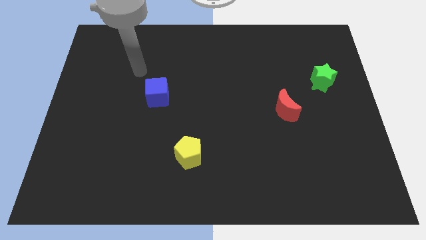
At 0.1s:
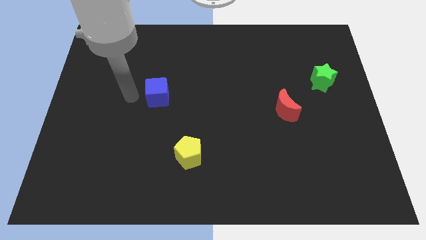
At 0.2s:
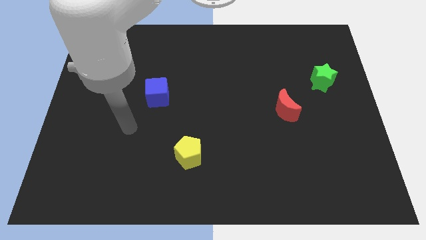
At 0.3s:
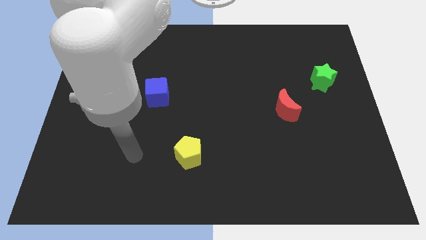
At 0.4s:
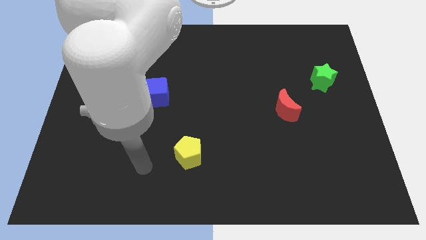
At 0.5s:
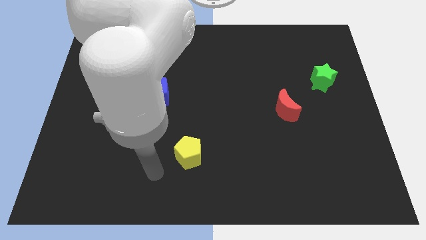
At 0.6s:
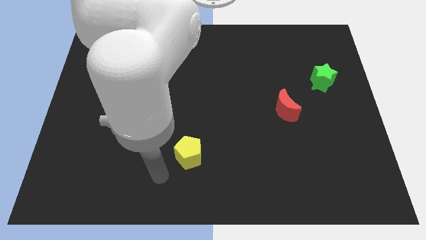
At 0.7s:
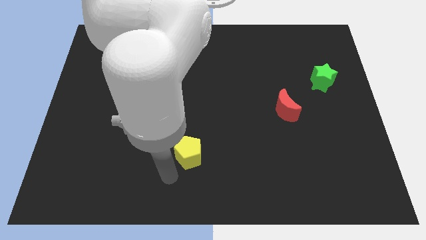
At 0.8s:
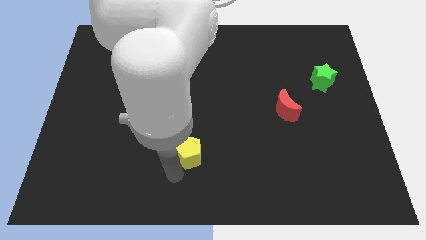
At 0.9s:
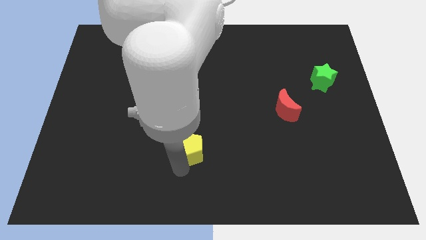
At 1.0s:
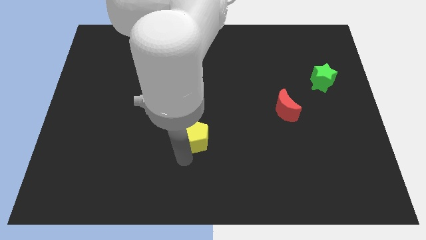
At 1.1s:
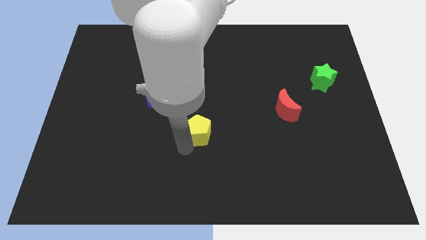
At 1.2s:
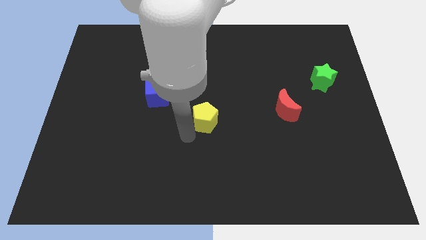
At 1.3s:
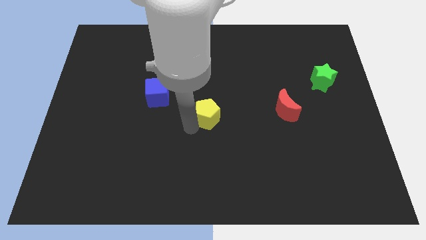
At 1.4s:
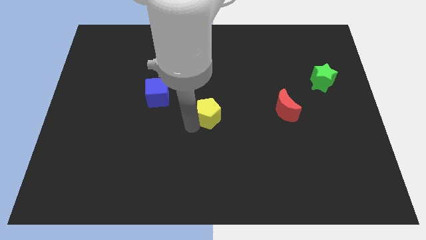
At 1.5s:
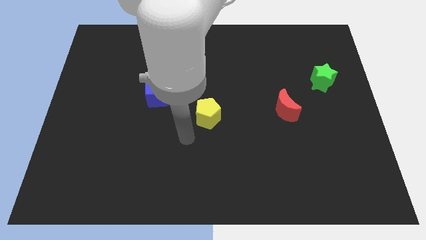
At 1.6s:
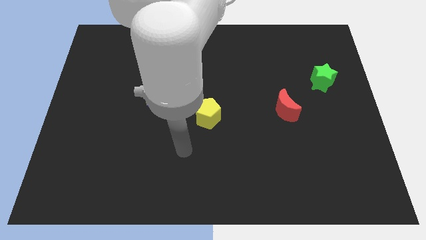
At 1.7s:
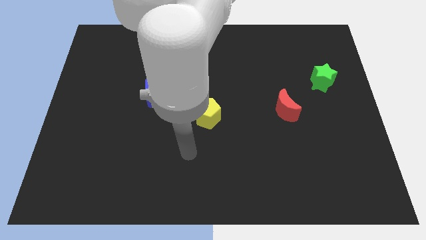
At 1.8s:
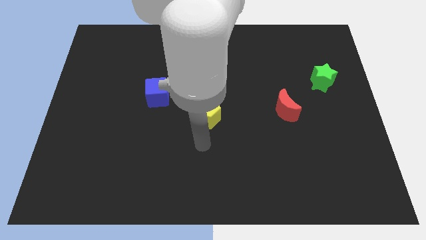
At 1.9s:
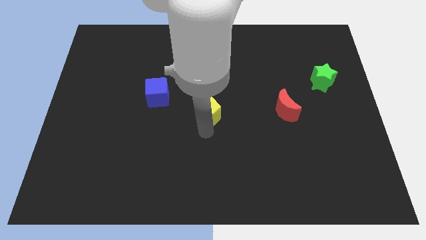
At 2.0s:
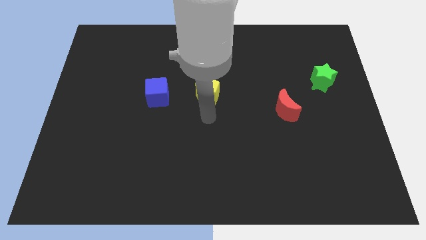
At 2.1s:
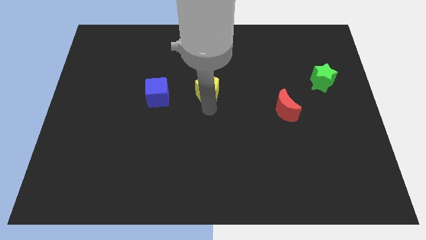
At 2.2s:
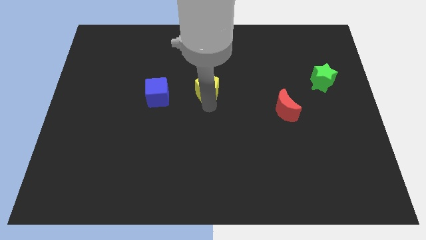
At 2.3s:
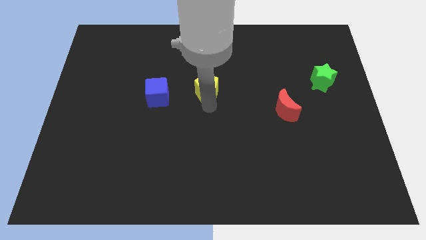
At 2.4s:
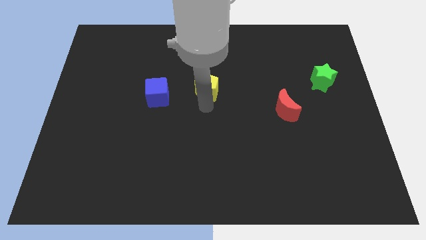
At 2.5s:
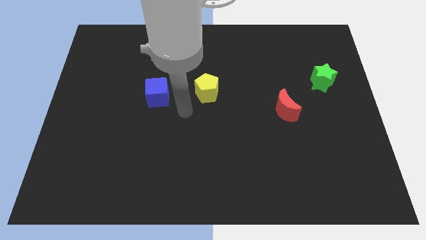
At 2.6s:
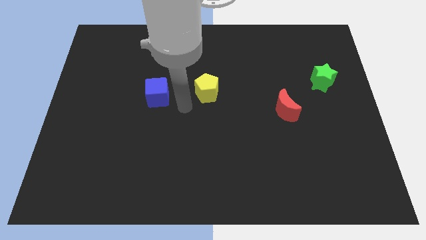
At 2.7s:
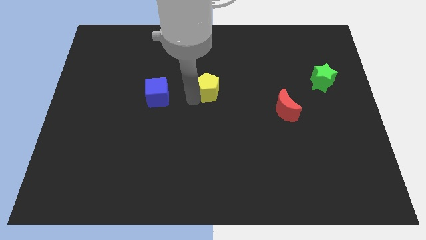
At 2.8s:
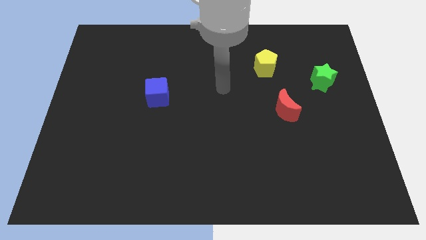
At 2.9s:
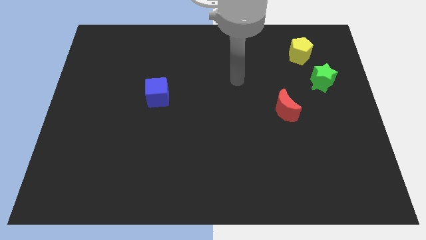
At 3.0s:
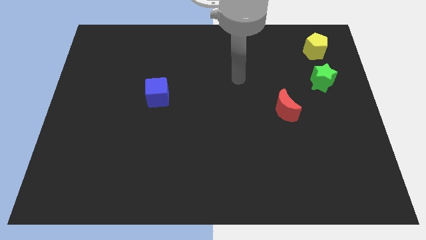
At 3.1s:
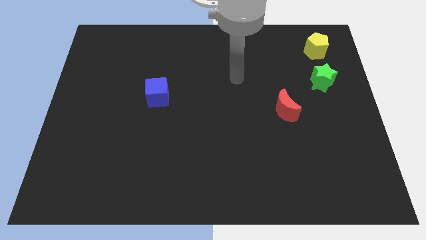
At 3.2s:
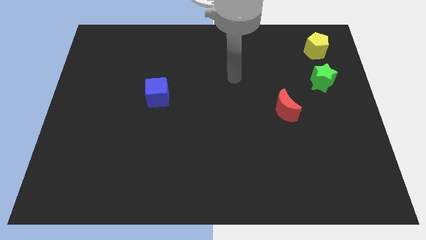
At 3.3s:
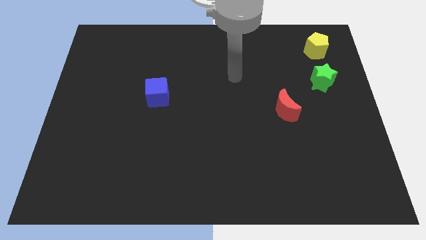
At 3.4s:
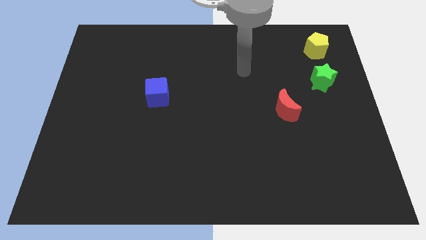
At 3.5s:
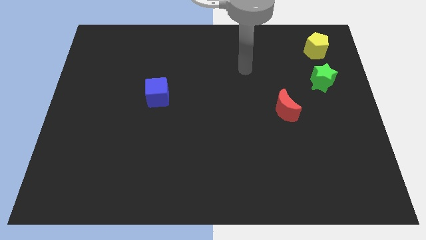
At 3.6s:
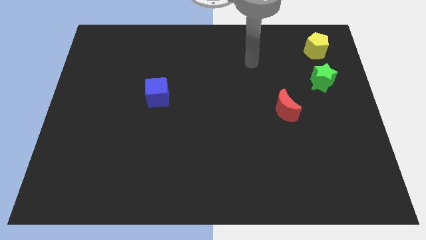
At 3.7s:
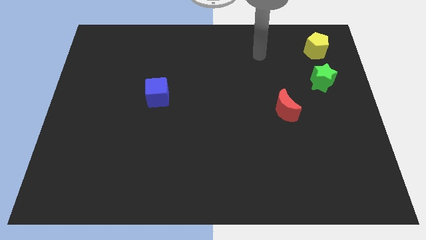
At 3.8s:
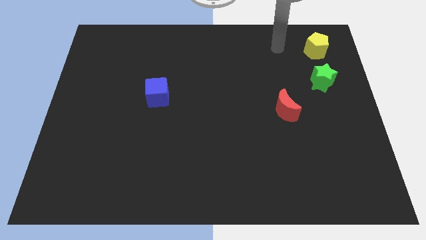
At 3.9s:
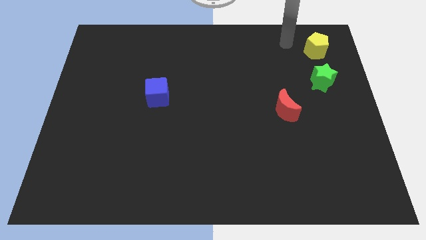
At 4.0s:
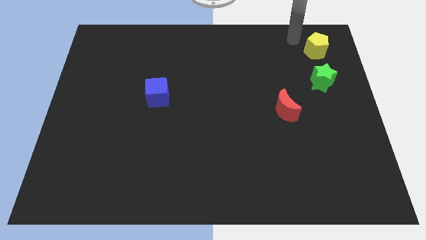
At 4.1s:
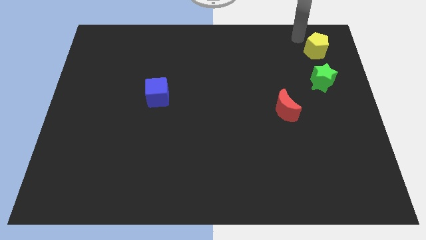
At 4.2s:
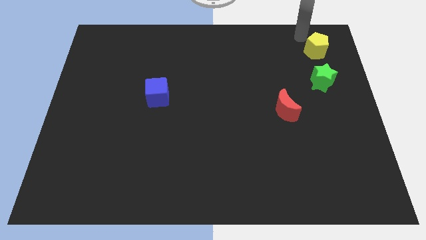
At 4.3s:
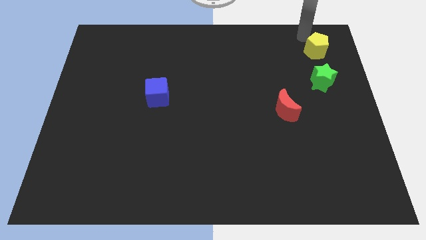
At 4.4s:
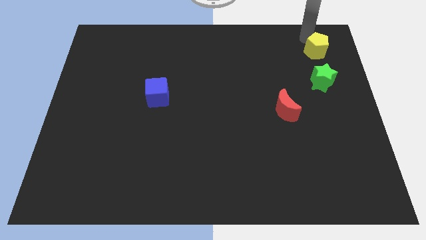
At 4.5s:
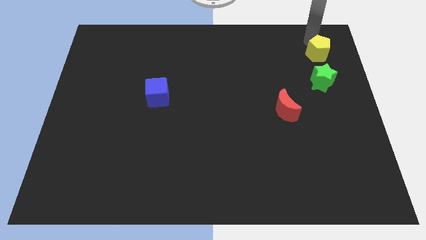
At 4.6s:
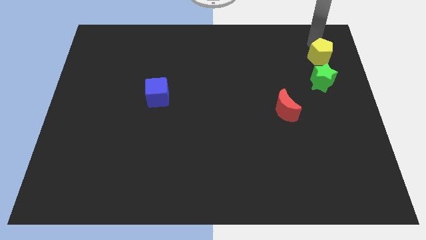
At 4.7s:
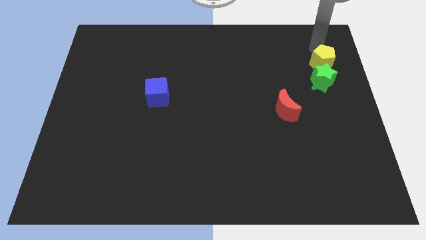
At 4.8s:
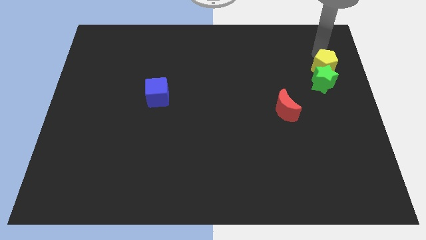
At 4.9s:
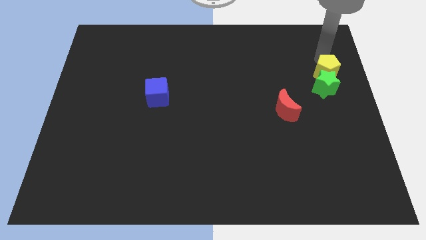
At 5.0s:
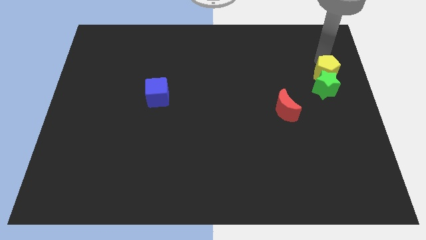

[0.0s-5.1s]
put the yellow block to the green block

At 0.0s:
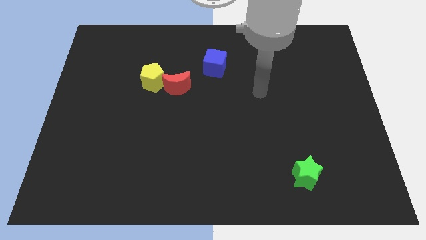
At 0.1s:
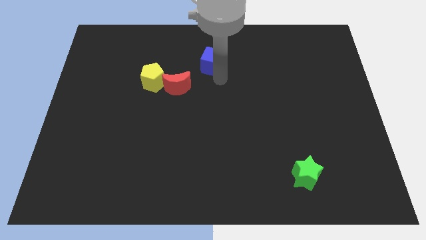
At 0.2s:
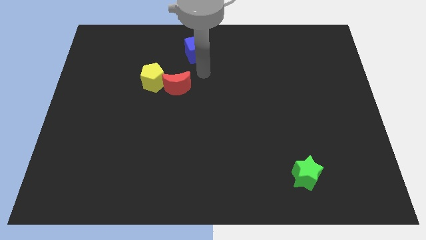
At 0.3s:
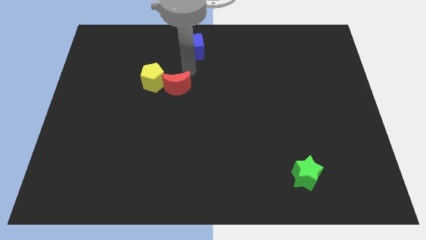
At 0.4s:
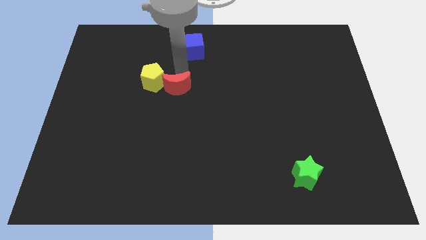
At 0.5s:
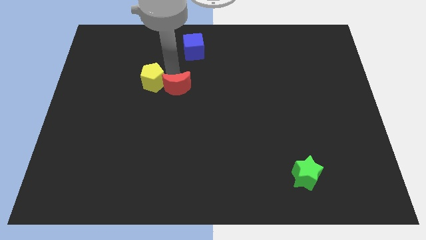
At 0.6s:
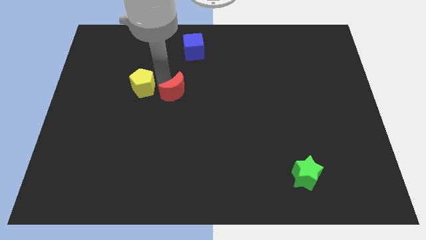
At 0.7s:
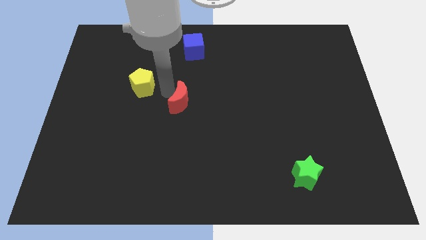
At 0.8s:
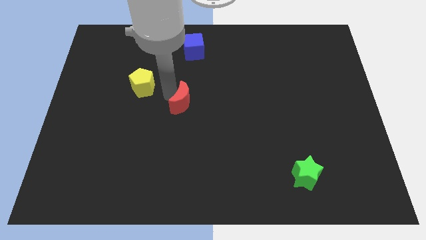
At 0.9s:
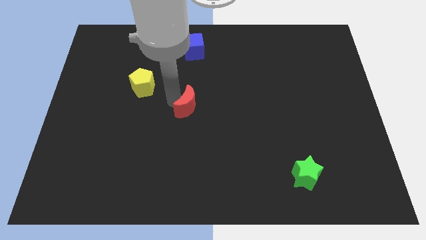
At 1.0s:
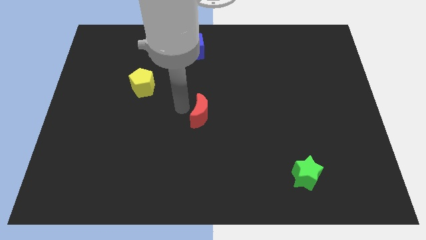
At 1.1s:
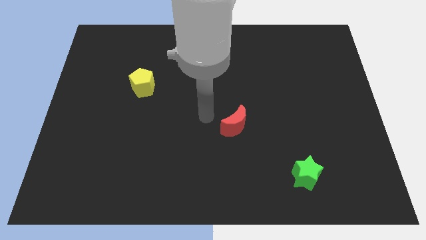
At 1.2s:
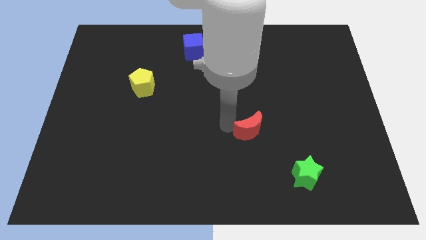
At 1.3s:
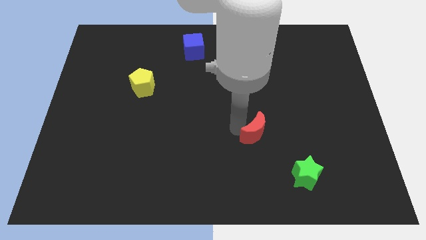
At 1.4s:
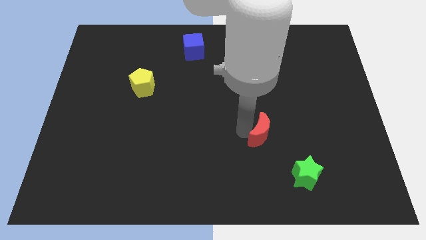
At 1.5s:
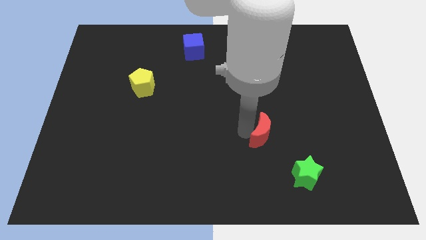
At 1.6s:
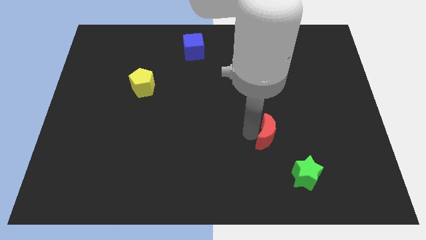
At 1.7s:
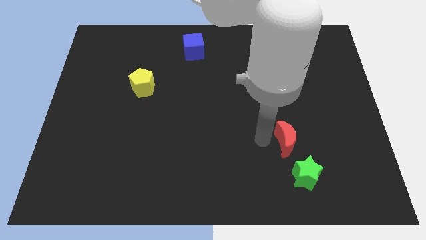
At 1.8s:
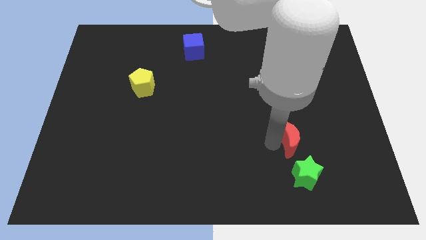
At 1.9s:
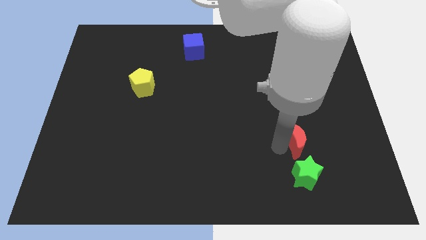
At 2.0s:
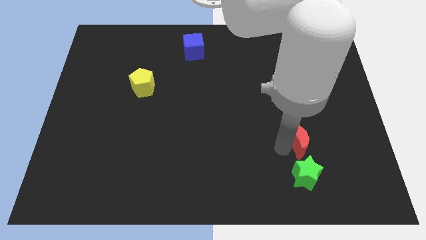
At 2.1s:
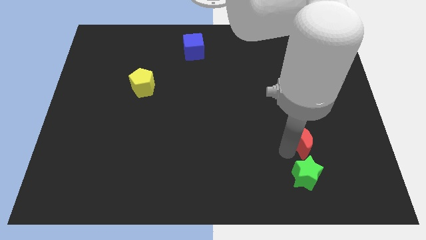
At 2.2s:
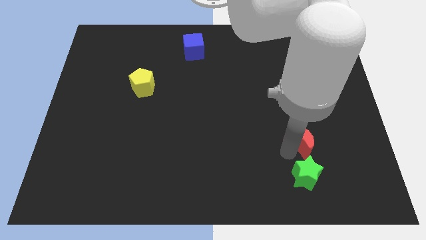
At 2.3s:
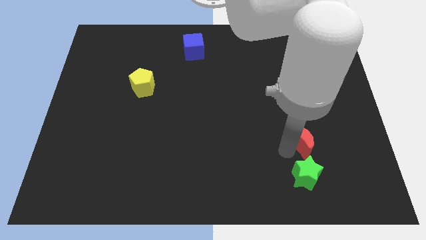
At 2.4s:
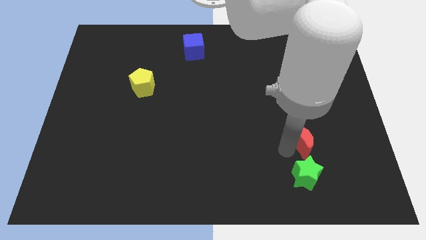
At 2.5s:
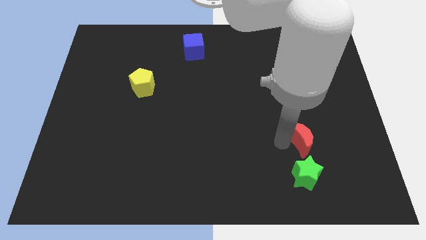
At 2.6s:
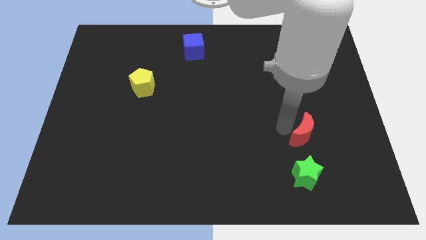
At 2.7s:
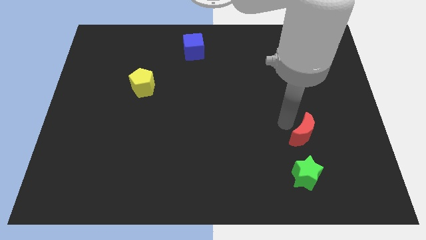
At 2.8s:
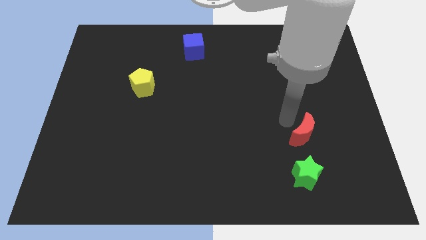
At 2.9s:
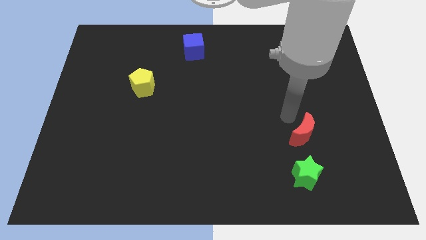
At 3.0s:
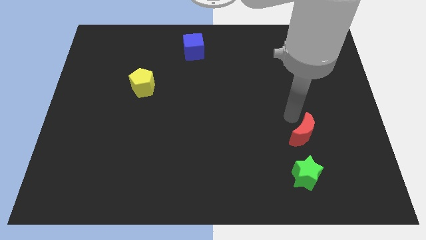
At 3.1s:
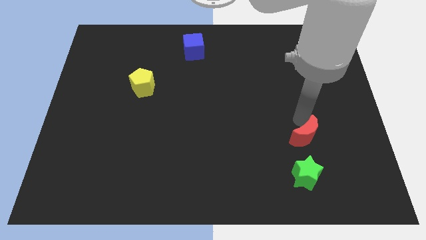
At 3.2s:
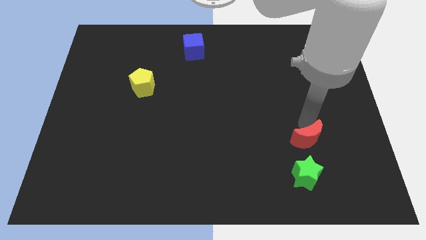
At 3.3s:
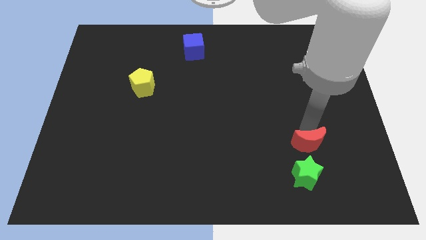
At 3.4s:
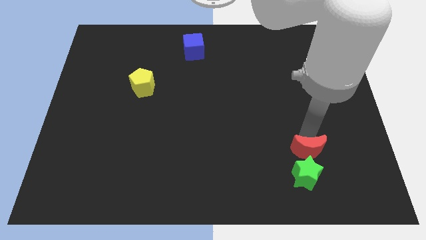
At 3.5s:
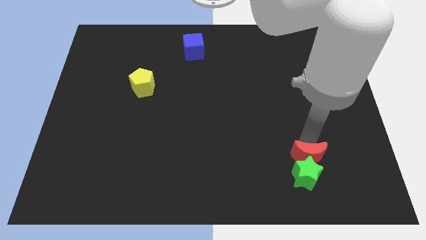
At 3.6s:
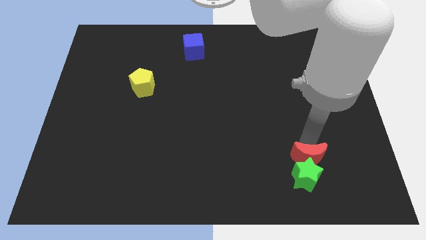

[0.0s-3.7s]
put the red block towards the star
